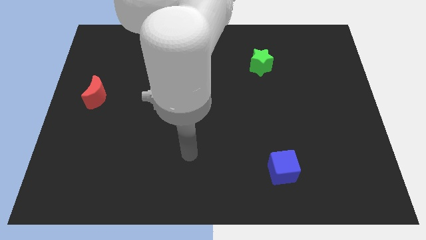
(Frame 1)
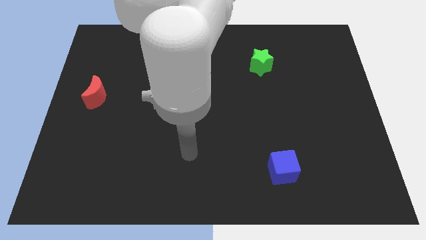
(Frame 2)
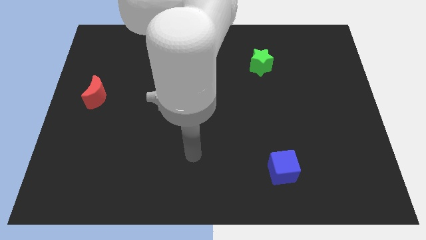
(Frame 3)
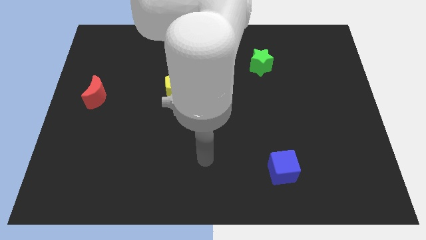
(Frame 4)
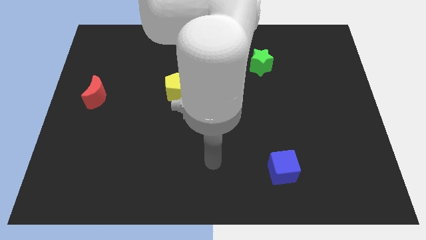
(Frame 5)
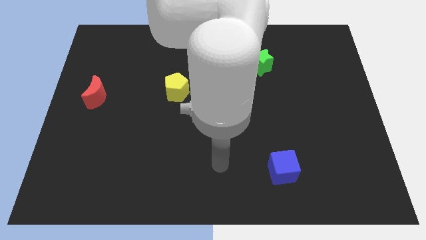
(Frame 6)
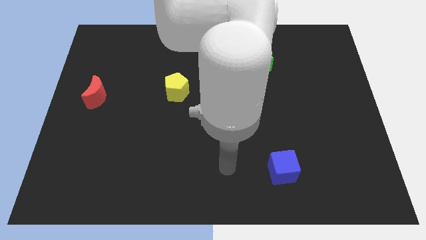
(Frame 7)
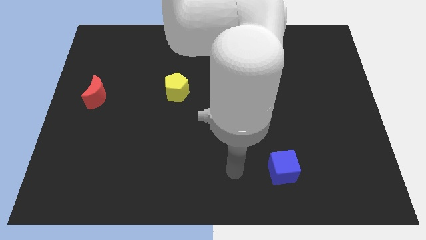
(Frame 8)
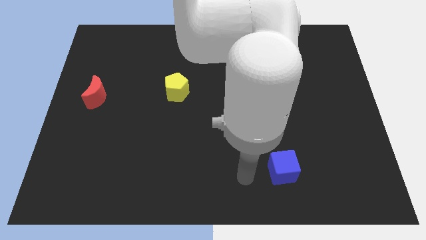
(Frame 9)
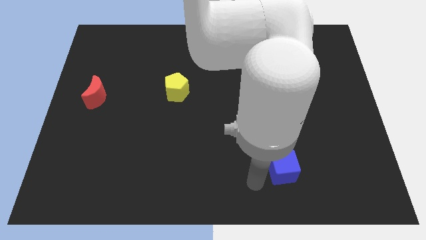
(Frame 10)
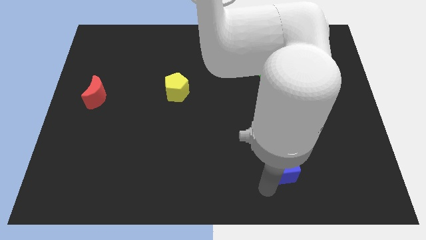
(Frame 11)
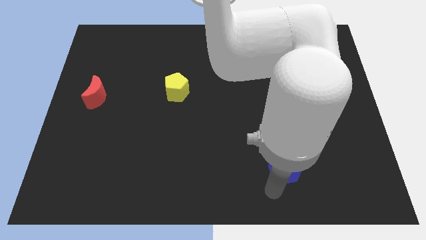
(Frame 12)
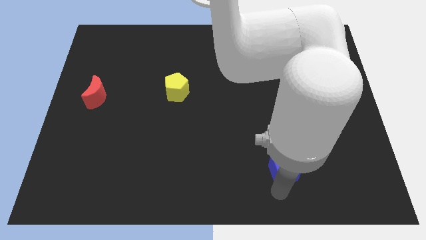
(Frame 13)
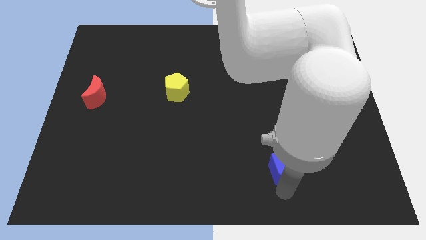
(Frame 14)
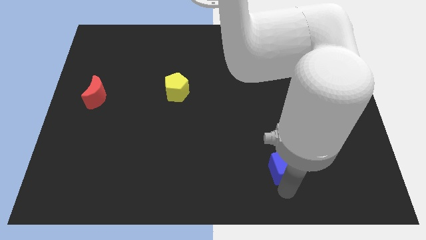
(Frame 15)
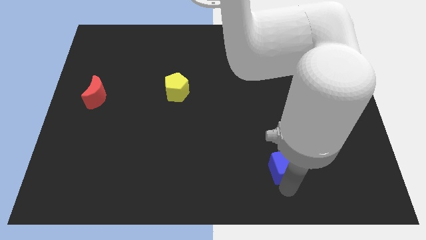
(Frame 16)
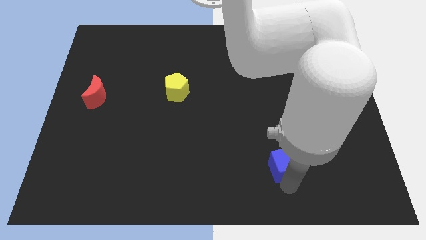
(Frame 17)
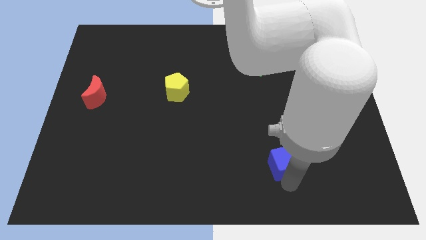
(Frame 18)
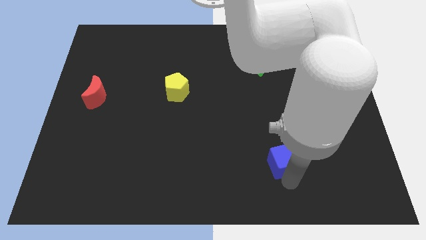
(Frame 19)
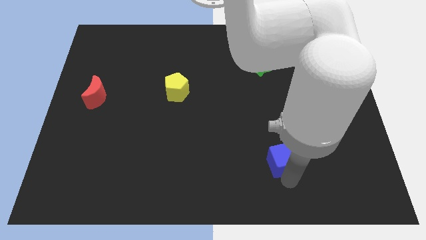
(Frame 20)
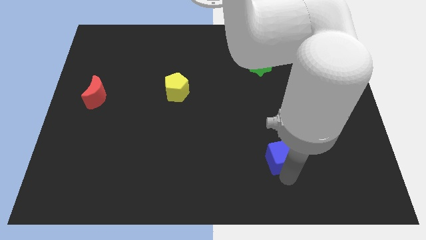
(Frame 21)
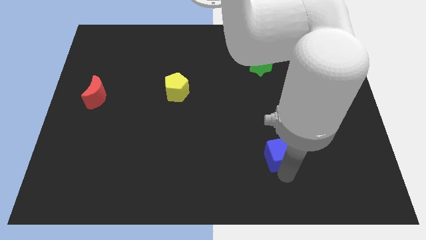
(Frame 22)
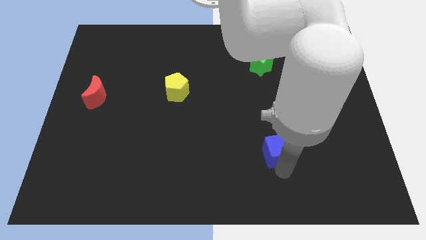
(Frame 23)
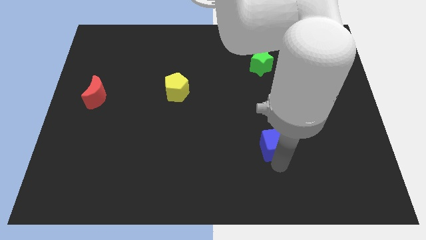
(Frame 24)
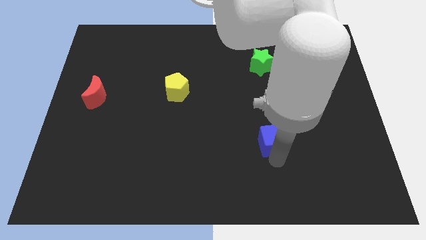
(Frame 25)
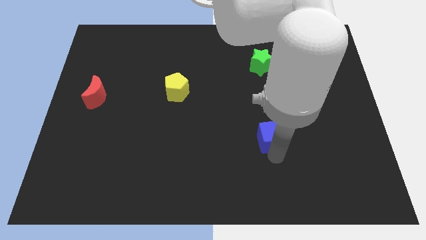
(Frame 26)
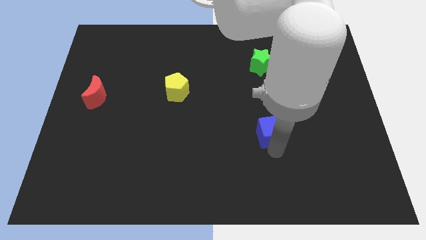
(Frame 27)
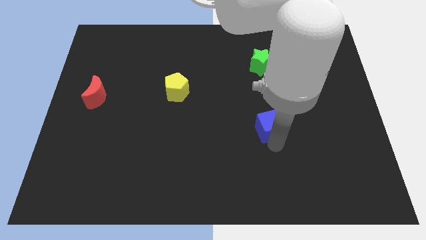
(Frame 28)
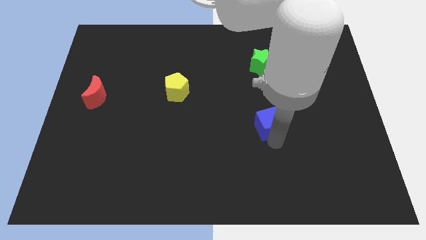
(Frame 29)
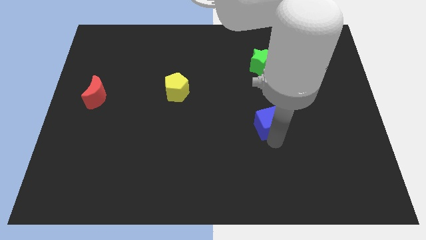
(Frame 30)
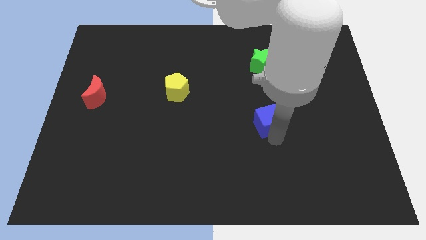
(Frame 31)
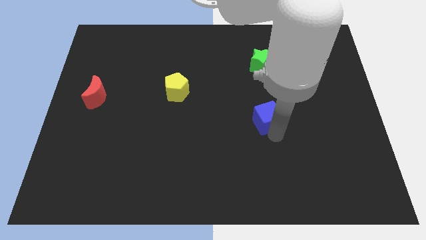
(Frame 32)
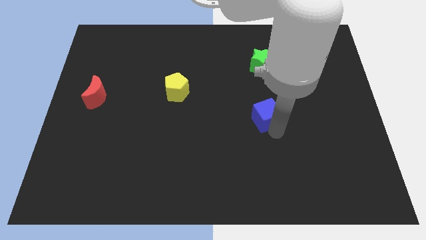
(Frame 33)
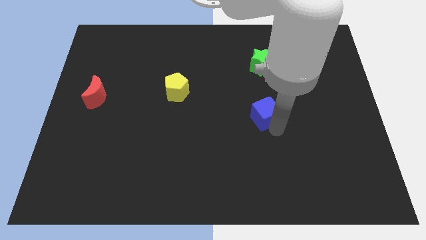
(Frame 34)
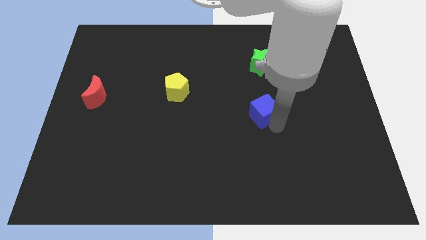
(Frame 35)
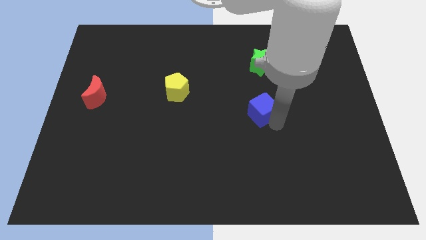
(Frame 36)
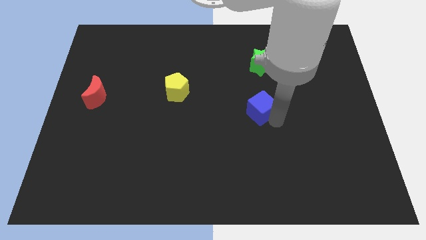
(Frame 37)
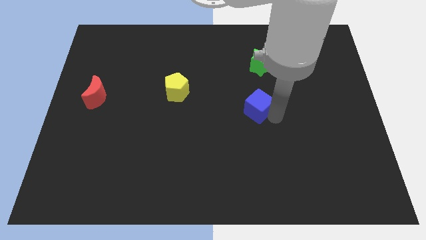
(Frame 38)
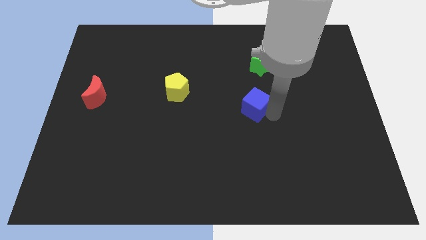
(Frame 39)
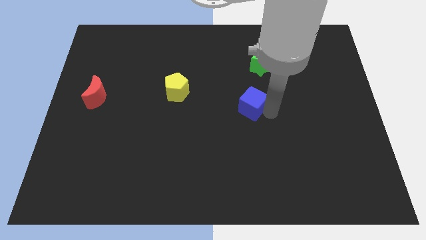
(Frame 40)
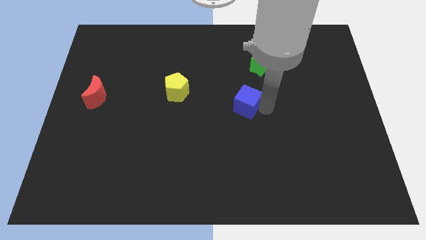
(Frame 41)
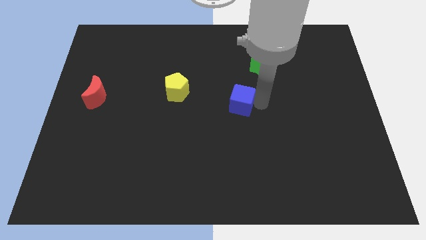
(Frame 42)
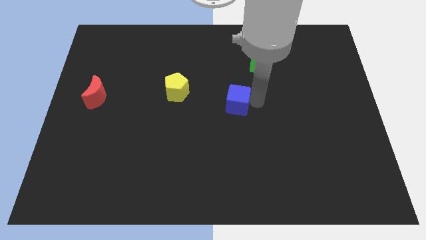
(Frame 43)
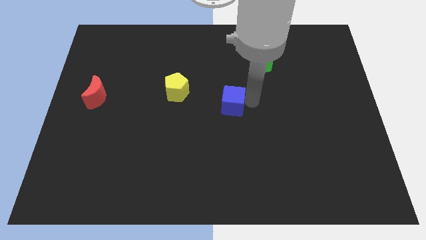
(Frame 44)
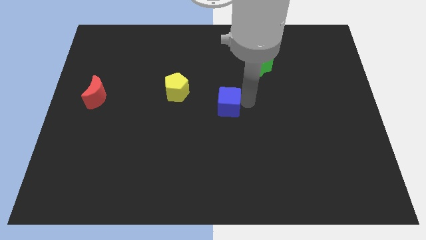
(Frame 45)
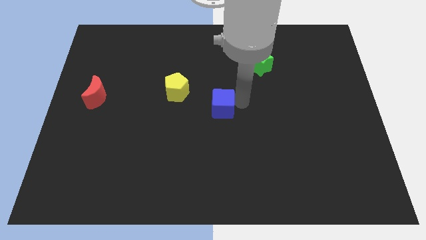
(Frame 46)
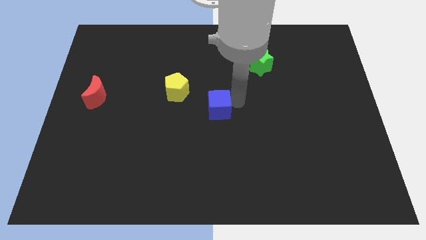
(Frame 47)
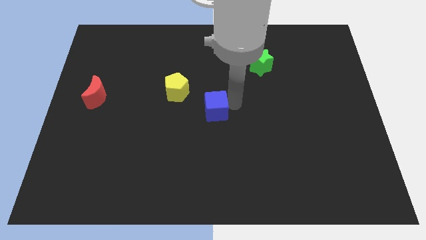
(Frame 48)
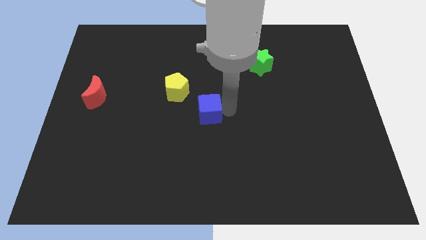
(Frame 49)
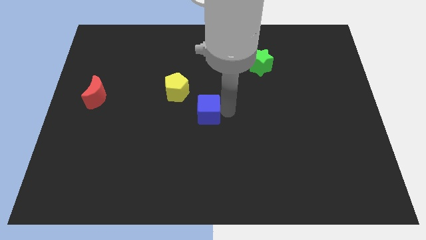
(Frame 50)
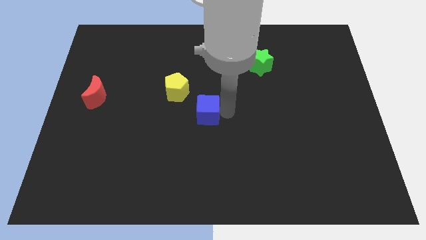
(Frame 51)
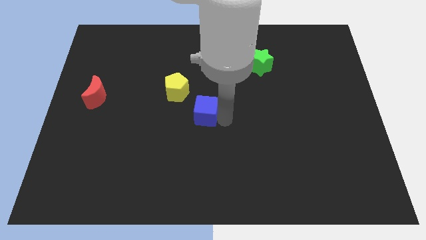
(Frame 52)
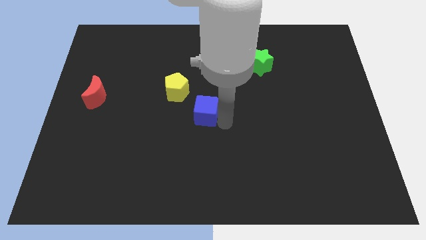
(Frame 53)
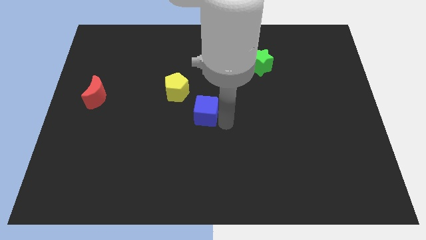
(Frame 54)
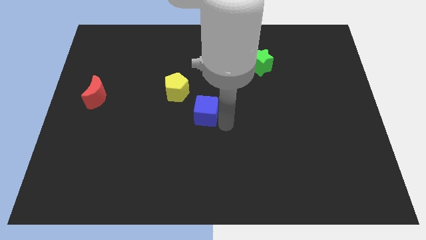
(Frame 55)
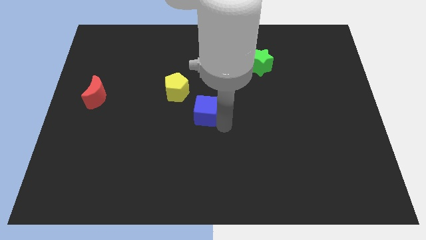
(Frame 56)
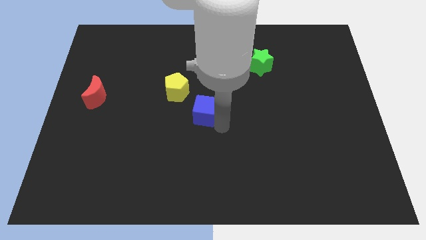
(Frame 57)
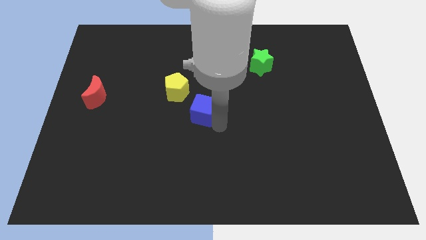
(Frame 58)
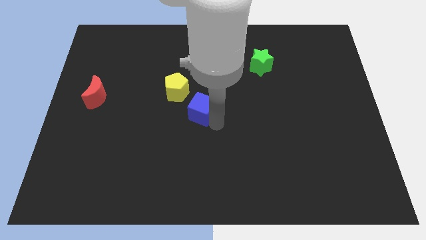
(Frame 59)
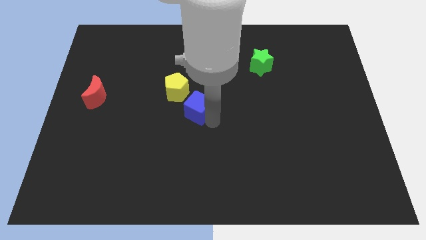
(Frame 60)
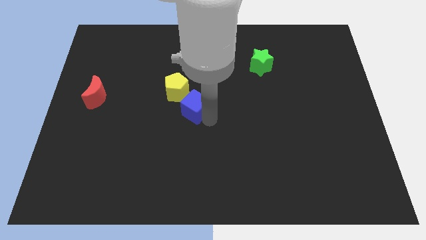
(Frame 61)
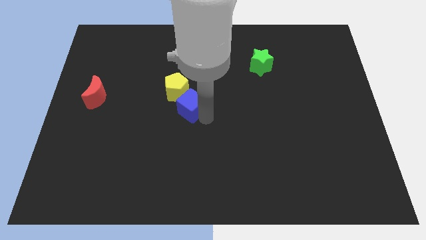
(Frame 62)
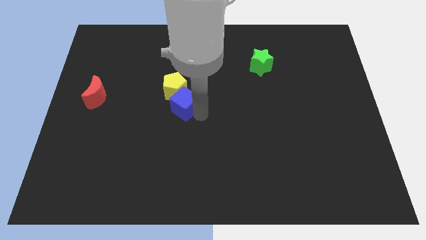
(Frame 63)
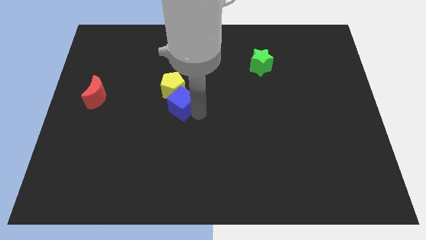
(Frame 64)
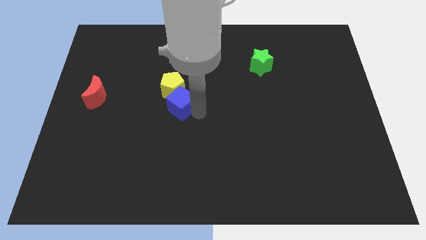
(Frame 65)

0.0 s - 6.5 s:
put the cube to the yellow pentagon

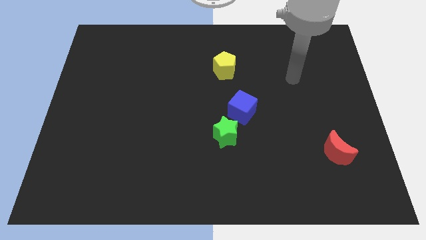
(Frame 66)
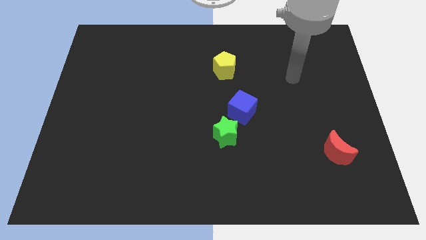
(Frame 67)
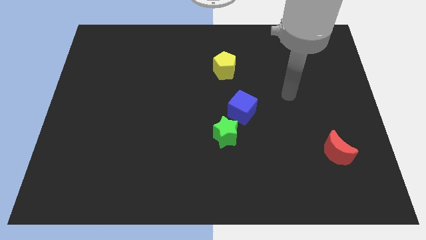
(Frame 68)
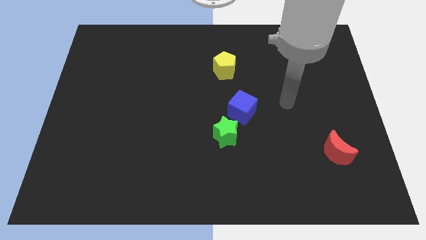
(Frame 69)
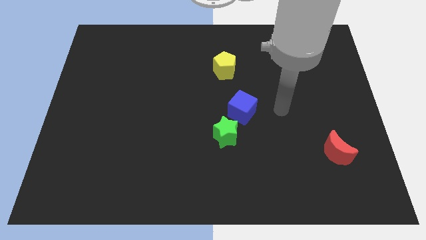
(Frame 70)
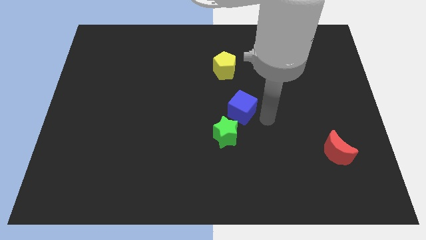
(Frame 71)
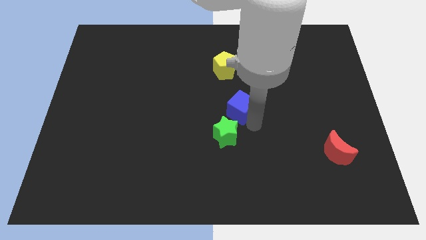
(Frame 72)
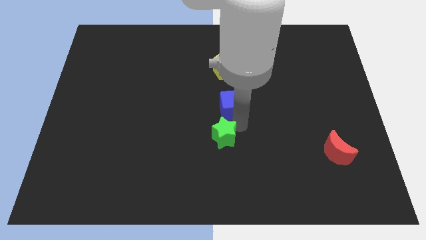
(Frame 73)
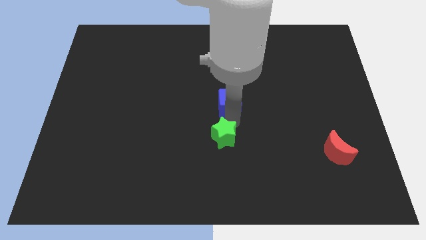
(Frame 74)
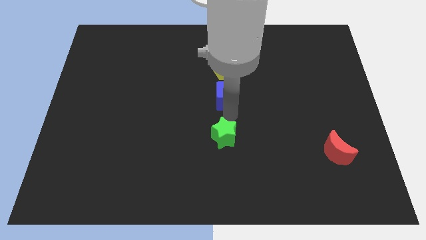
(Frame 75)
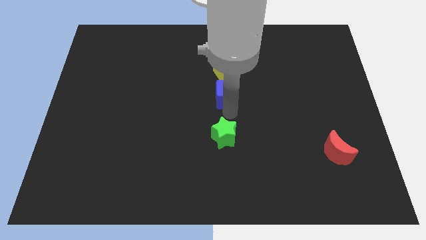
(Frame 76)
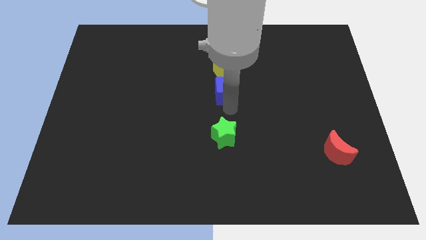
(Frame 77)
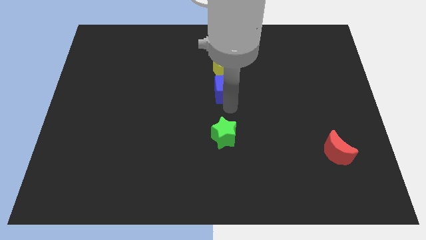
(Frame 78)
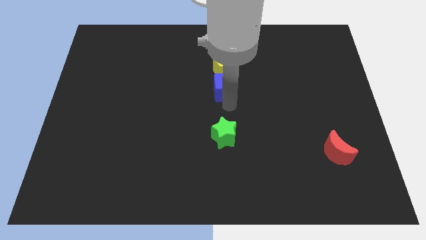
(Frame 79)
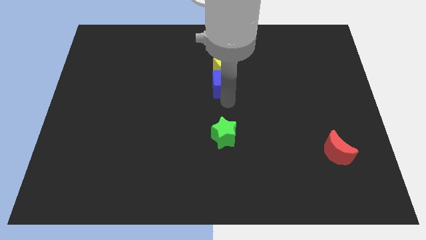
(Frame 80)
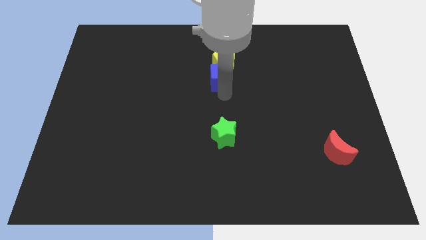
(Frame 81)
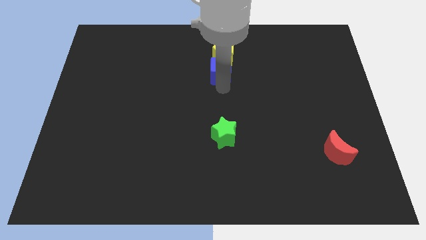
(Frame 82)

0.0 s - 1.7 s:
put the blue cube next to the pentagon
